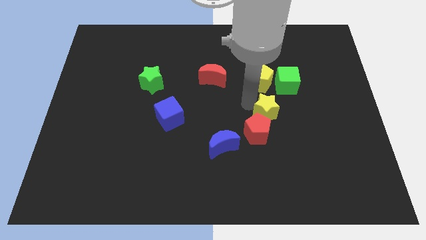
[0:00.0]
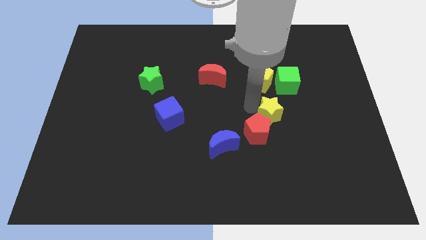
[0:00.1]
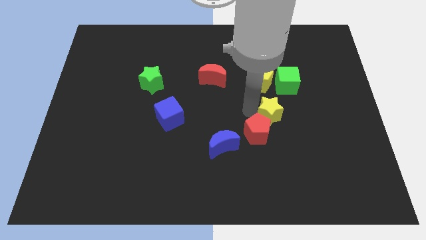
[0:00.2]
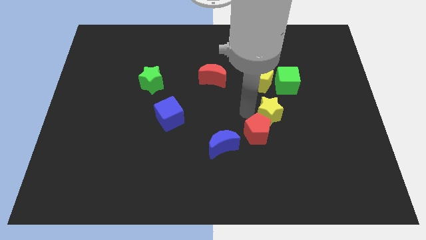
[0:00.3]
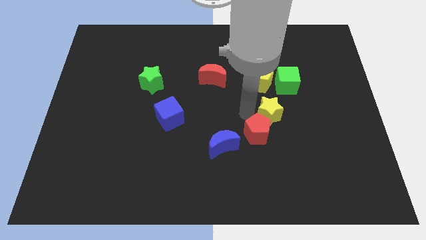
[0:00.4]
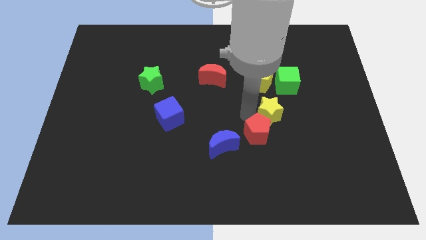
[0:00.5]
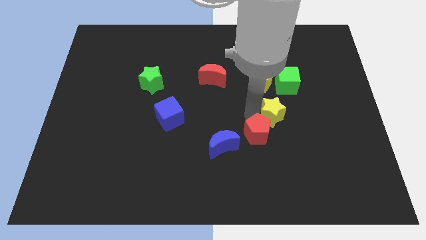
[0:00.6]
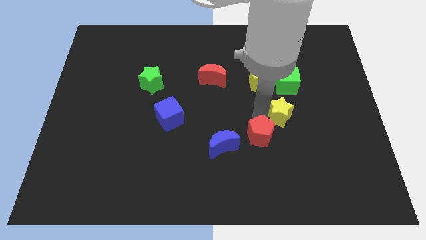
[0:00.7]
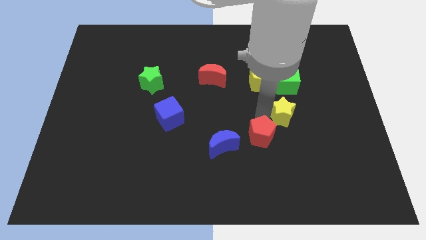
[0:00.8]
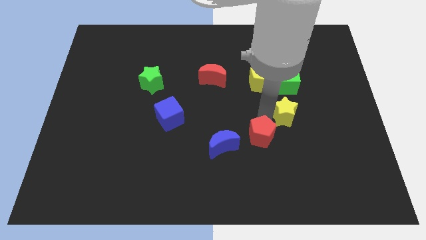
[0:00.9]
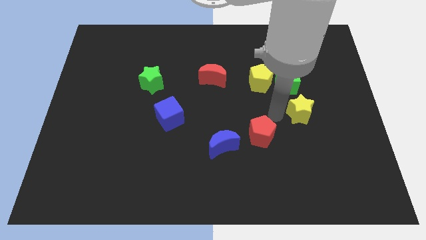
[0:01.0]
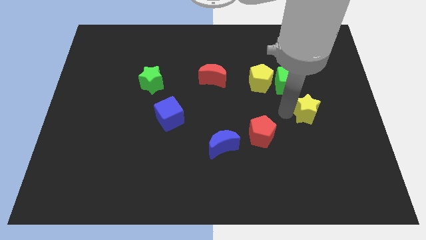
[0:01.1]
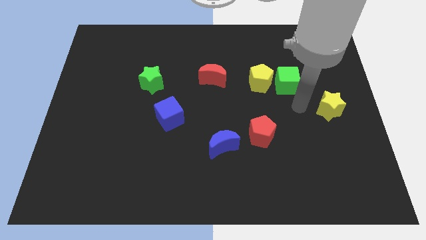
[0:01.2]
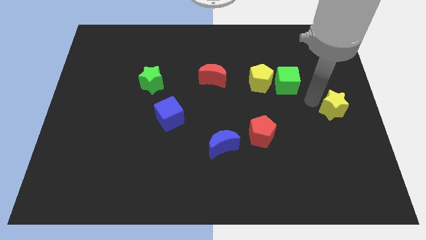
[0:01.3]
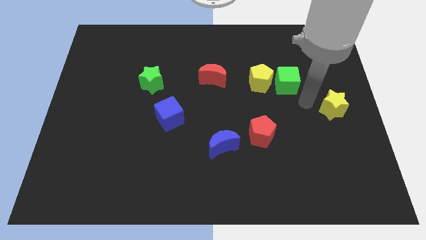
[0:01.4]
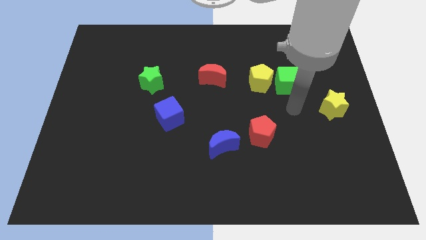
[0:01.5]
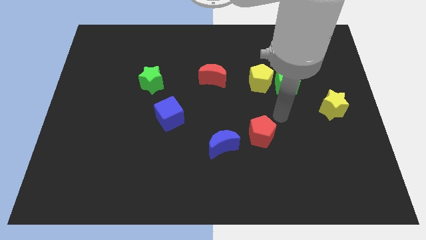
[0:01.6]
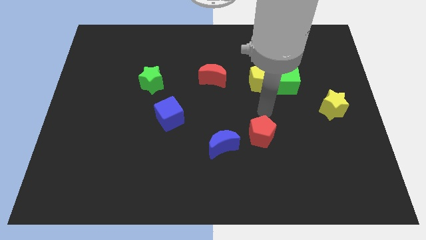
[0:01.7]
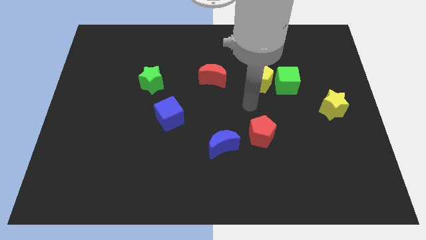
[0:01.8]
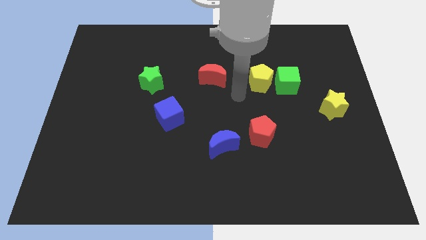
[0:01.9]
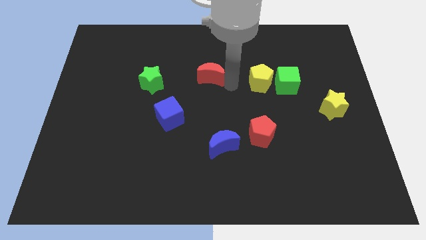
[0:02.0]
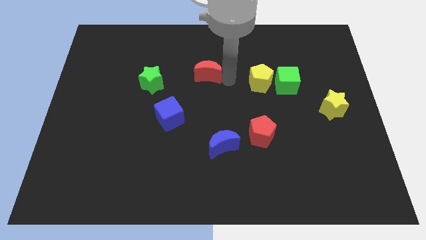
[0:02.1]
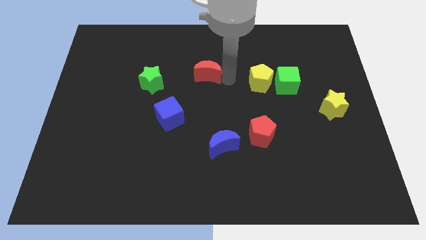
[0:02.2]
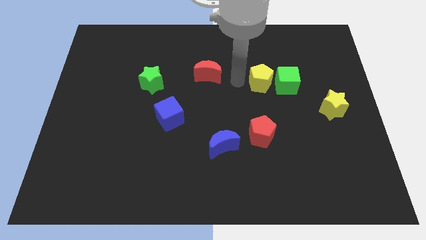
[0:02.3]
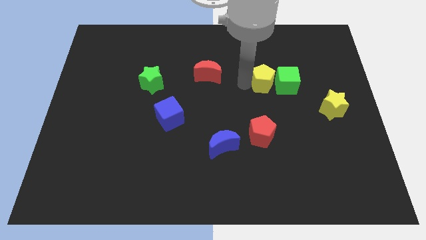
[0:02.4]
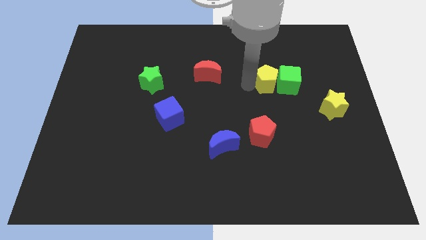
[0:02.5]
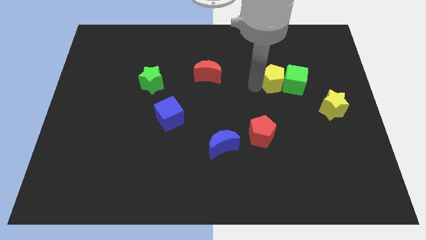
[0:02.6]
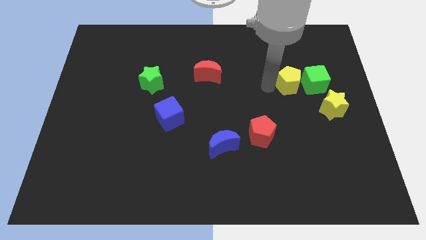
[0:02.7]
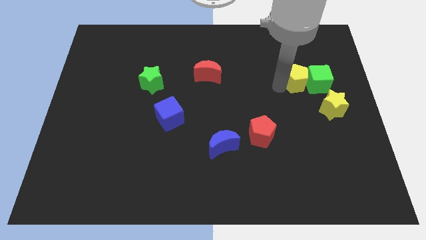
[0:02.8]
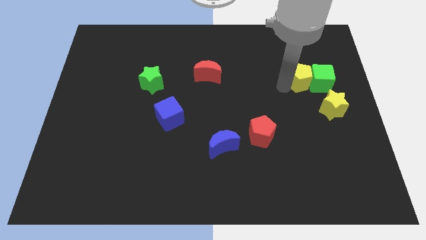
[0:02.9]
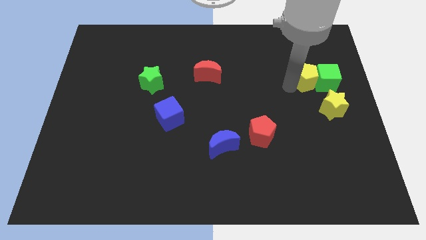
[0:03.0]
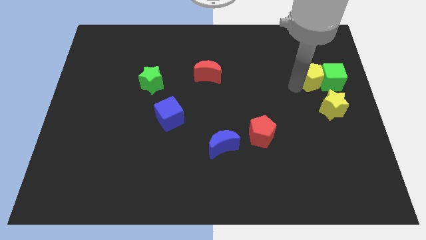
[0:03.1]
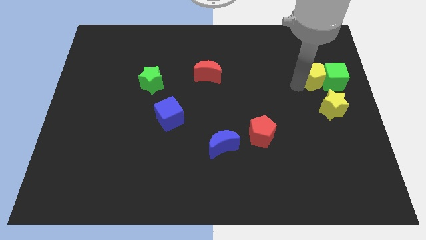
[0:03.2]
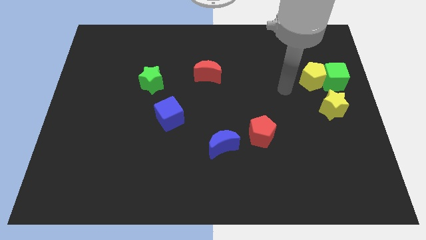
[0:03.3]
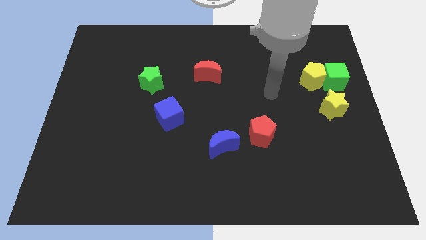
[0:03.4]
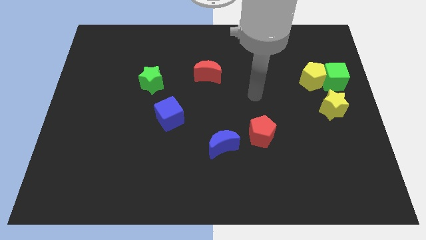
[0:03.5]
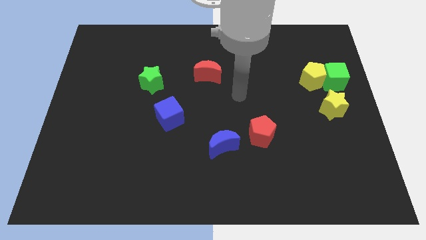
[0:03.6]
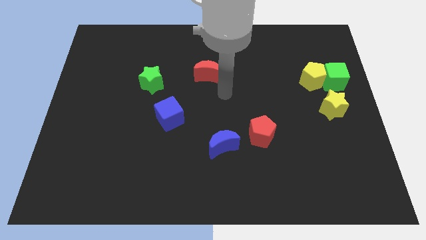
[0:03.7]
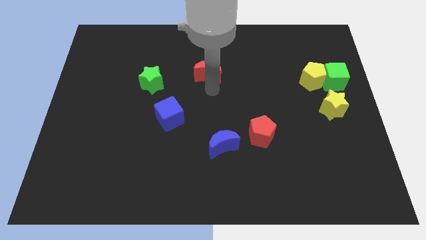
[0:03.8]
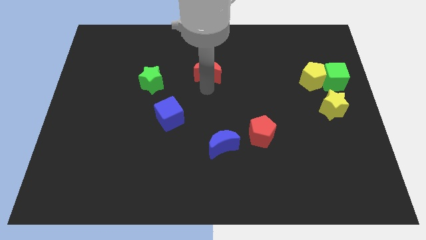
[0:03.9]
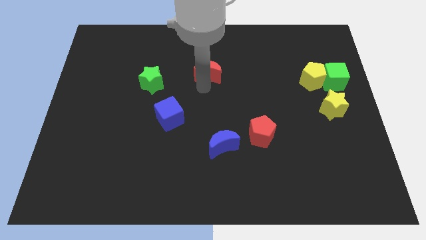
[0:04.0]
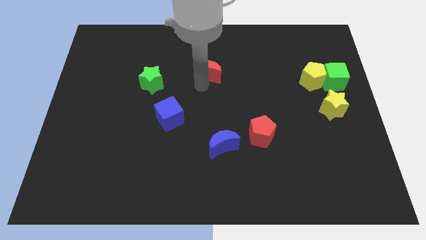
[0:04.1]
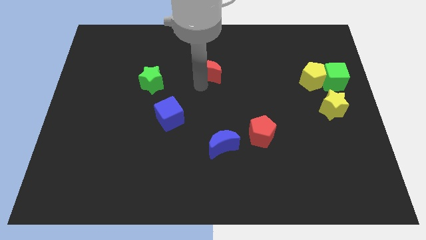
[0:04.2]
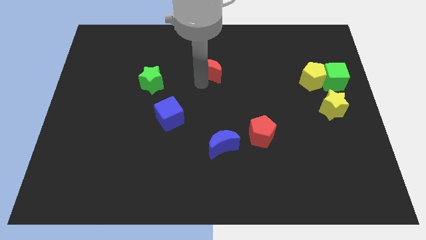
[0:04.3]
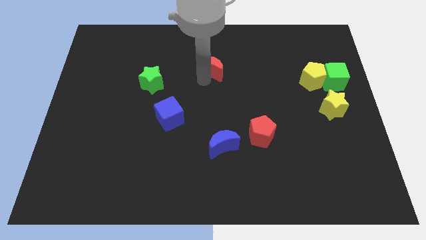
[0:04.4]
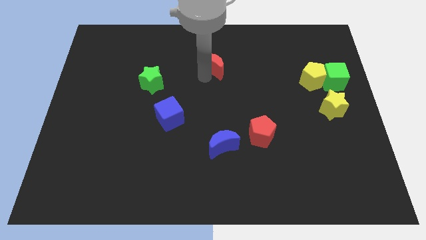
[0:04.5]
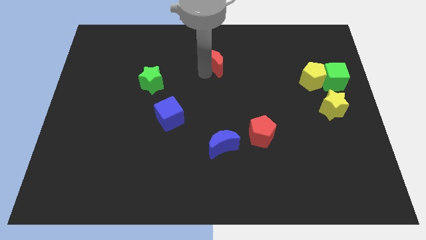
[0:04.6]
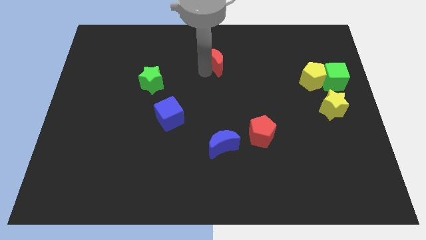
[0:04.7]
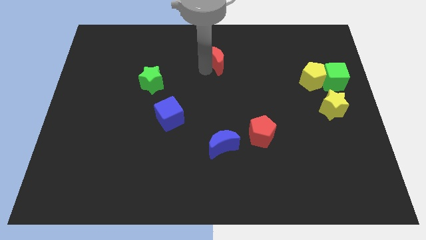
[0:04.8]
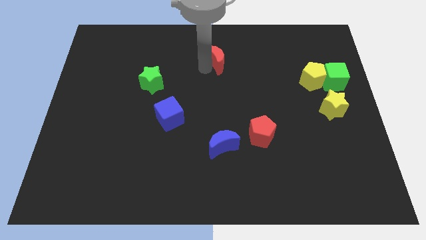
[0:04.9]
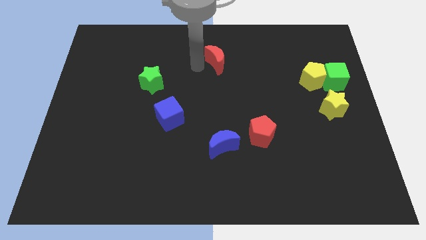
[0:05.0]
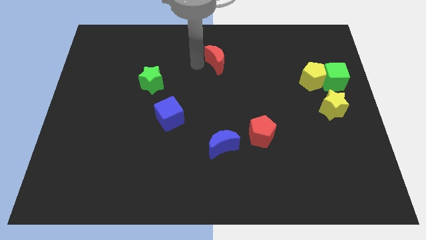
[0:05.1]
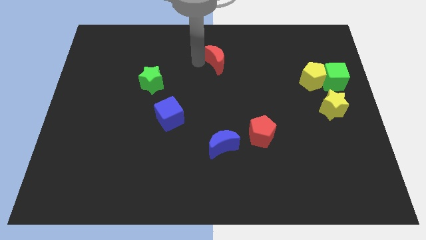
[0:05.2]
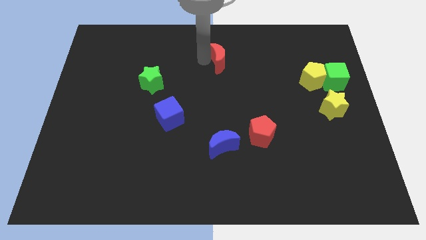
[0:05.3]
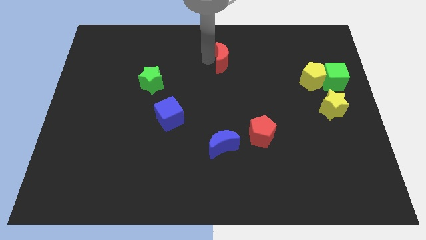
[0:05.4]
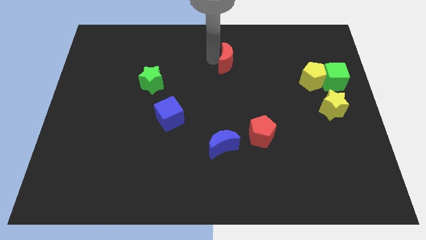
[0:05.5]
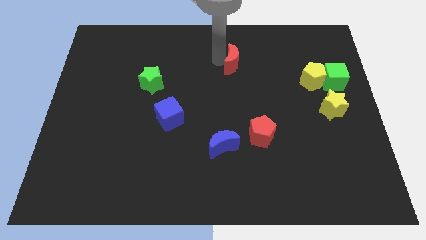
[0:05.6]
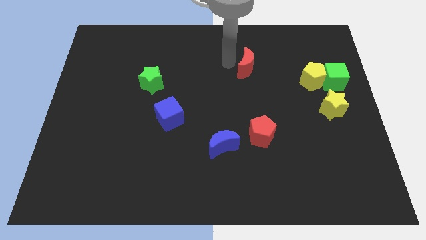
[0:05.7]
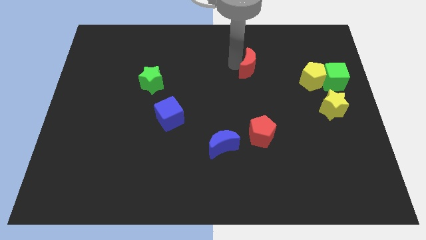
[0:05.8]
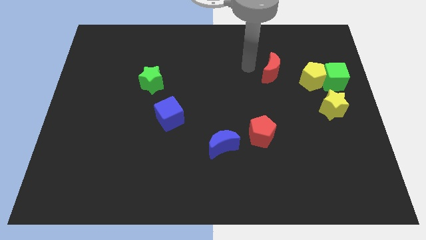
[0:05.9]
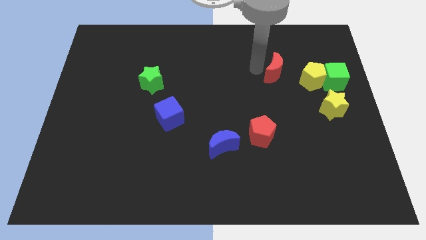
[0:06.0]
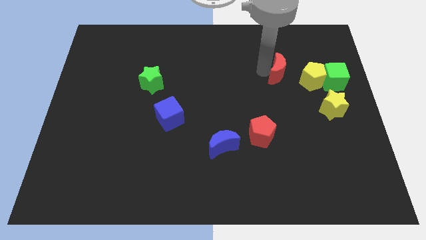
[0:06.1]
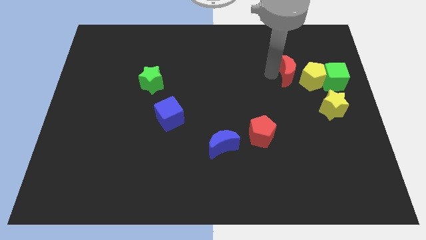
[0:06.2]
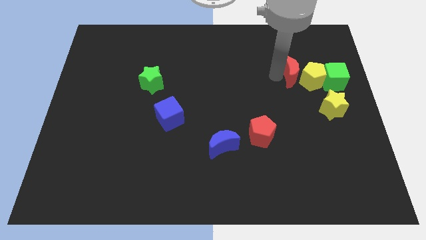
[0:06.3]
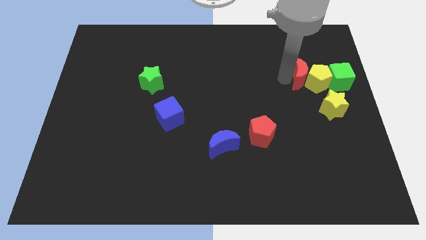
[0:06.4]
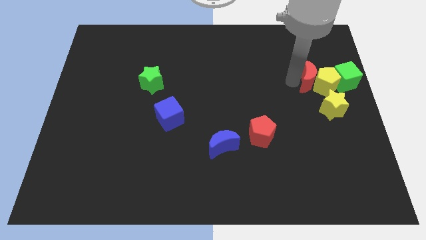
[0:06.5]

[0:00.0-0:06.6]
push green cube two yellow blocks and red moon to the right corner of the board

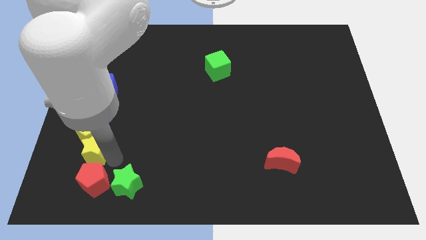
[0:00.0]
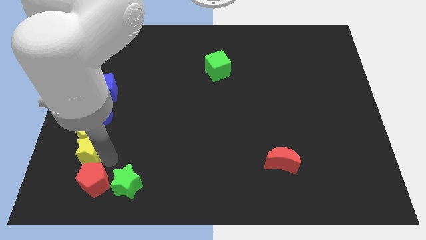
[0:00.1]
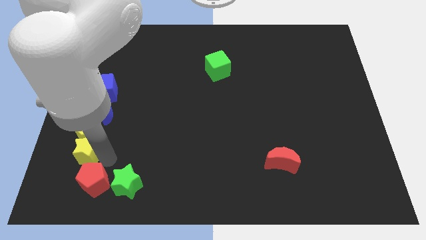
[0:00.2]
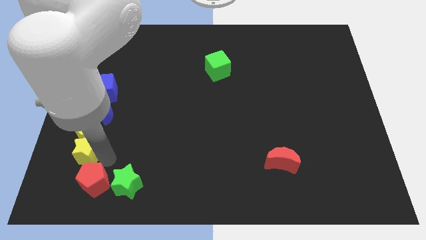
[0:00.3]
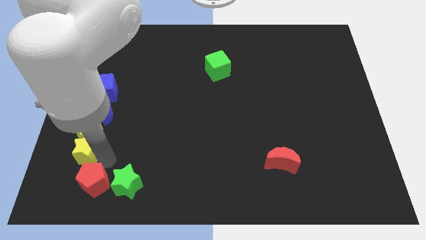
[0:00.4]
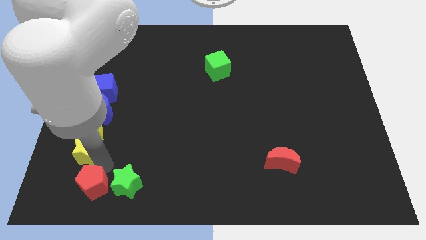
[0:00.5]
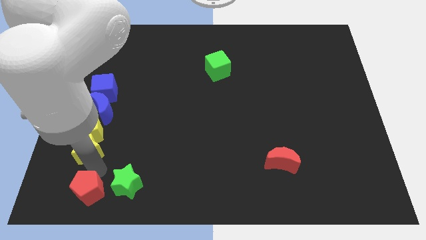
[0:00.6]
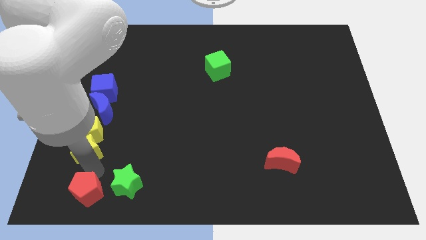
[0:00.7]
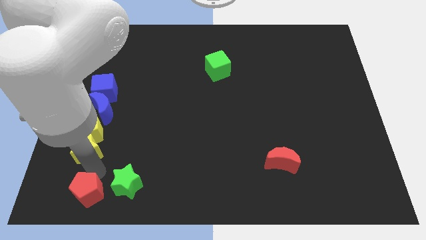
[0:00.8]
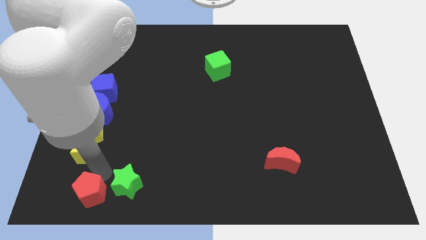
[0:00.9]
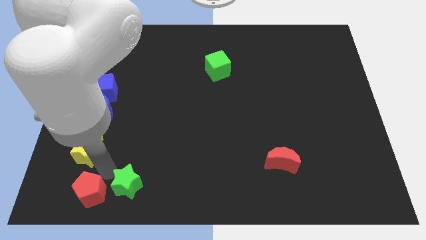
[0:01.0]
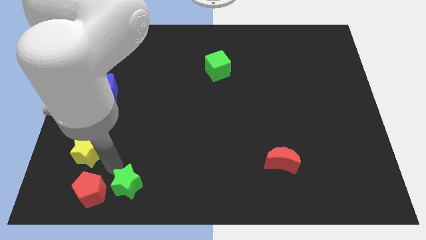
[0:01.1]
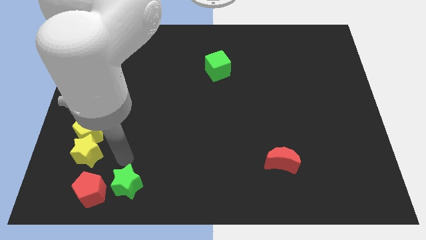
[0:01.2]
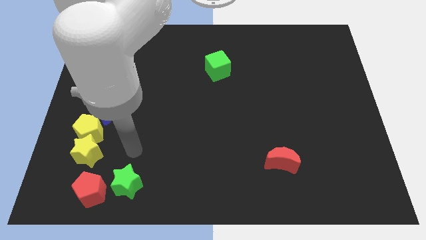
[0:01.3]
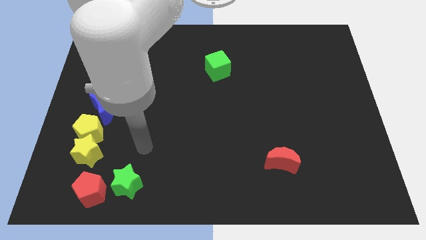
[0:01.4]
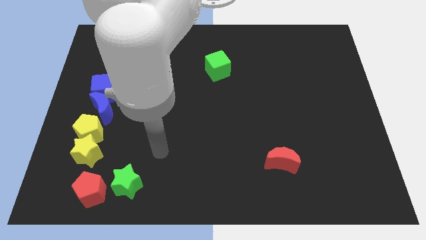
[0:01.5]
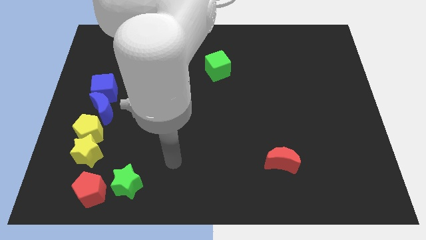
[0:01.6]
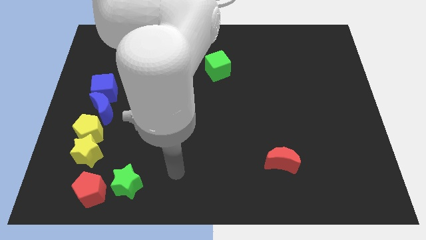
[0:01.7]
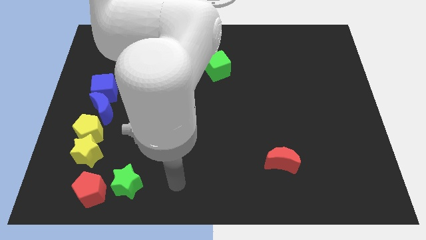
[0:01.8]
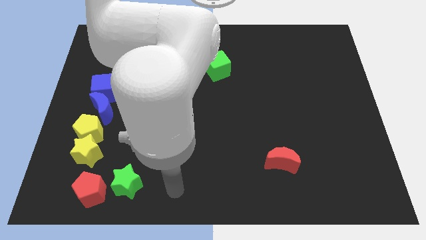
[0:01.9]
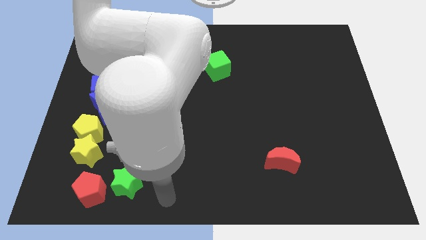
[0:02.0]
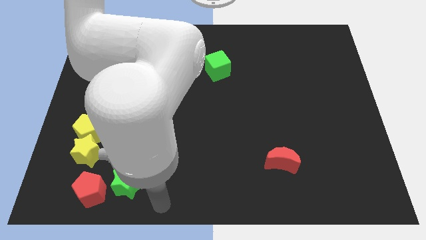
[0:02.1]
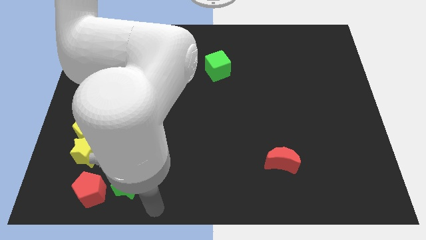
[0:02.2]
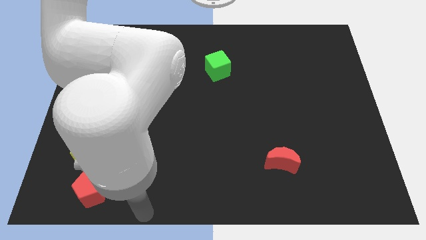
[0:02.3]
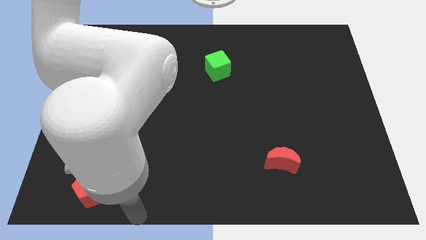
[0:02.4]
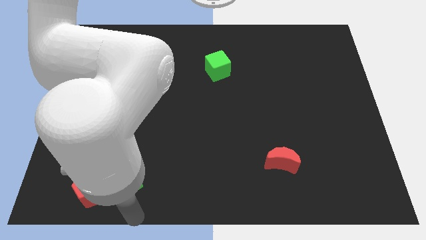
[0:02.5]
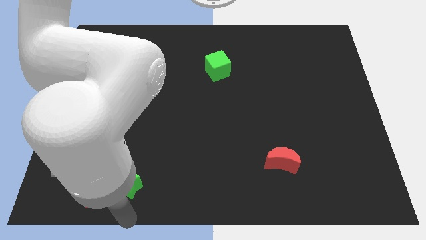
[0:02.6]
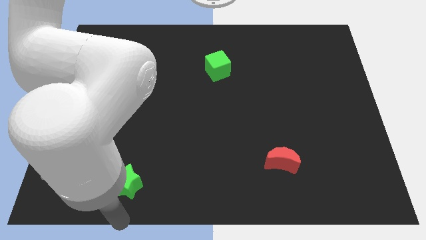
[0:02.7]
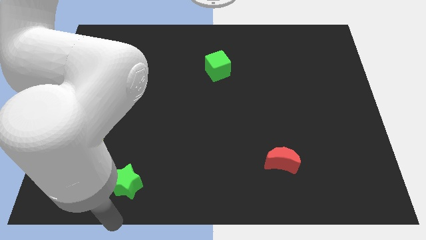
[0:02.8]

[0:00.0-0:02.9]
separate the yellow star and red crescent
